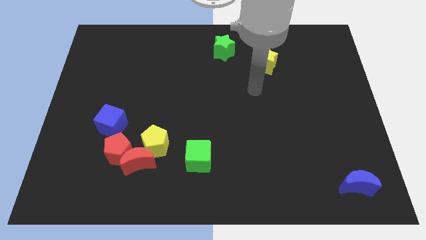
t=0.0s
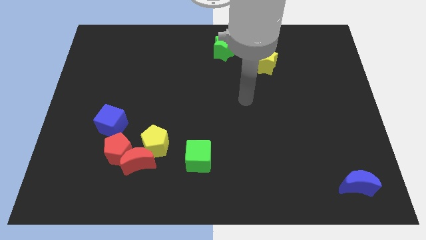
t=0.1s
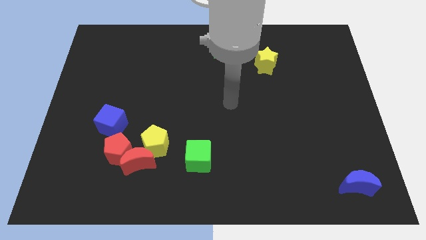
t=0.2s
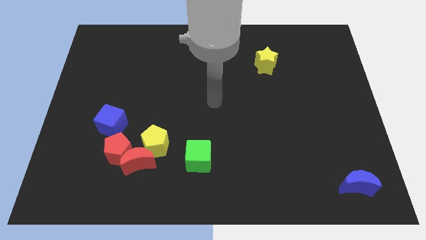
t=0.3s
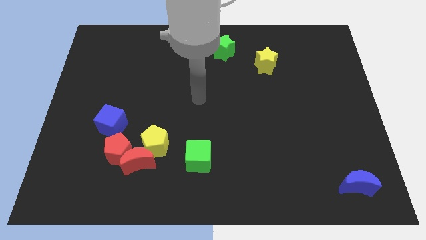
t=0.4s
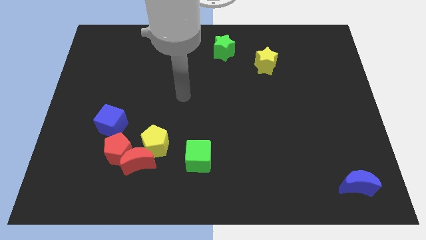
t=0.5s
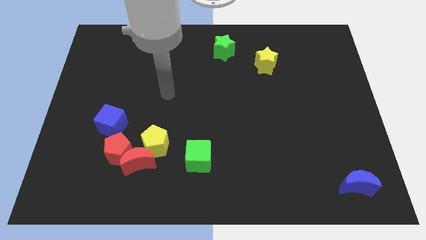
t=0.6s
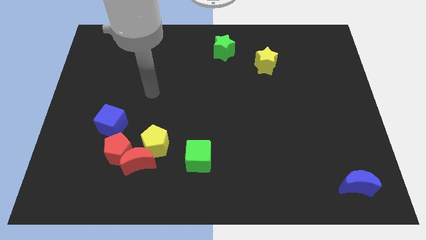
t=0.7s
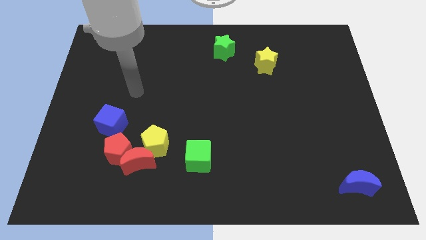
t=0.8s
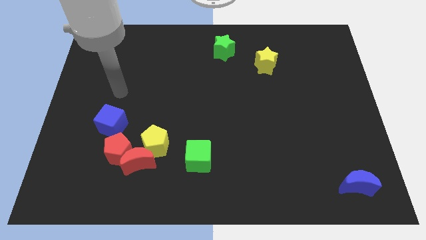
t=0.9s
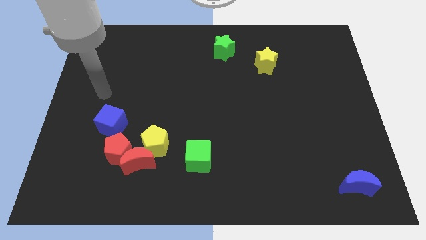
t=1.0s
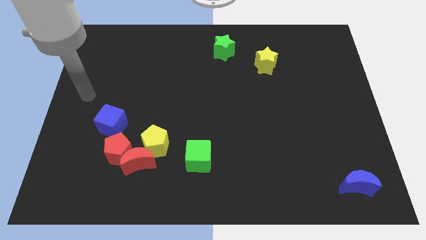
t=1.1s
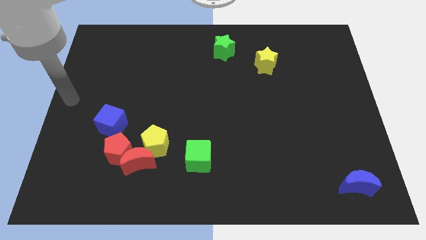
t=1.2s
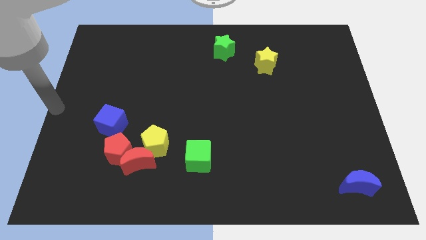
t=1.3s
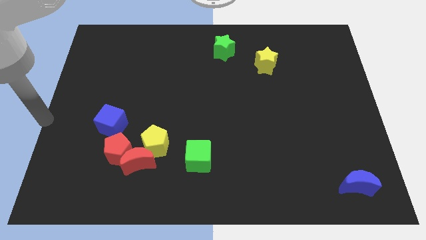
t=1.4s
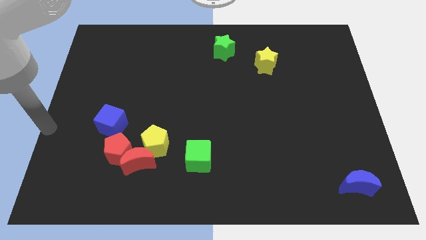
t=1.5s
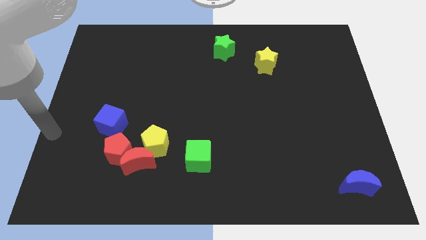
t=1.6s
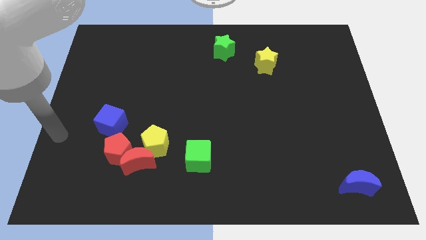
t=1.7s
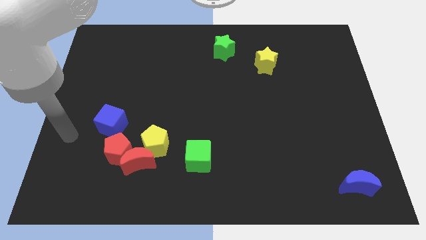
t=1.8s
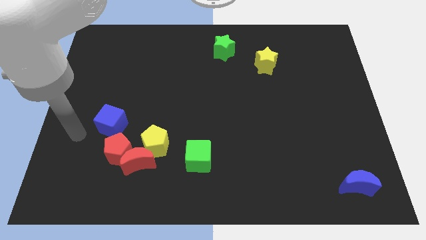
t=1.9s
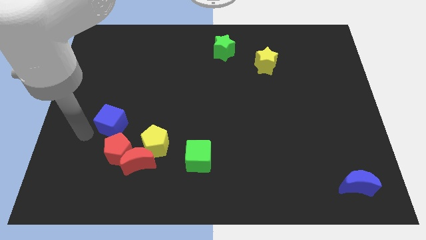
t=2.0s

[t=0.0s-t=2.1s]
move your arm to the left side of the blue cube

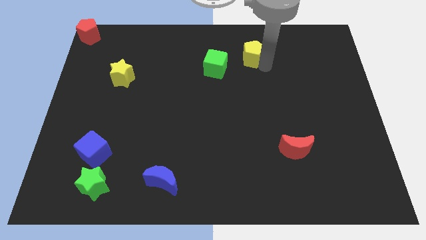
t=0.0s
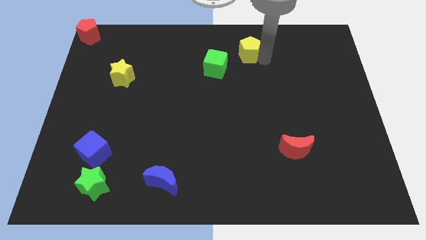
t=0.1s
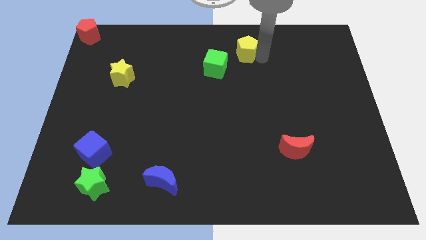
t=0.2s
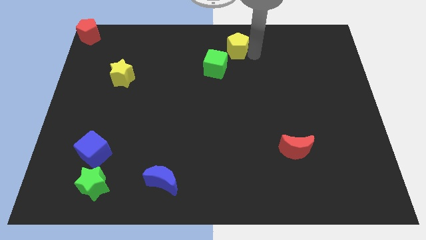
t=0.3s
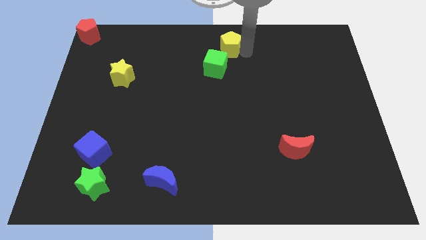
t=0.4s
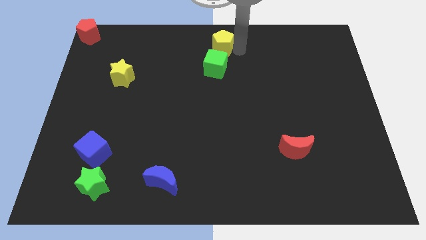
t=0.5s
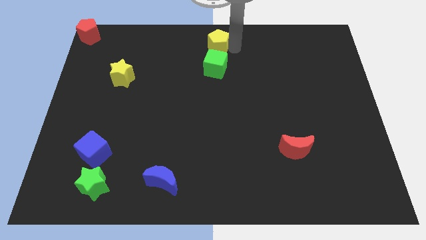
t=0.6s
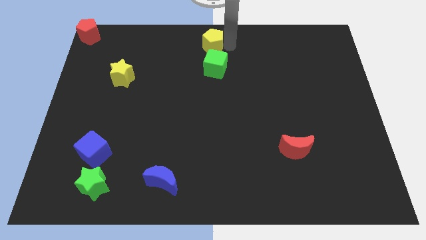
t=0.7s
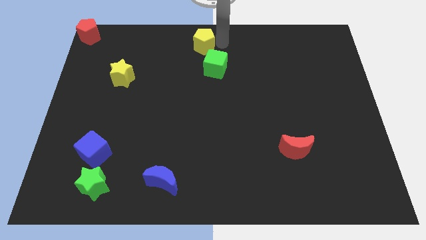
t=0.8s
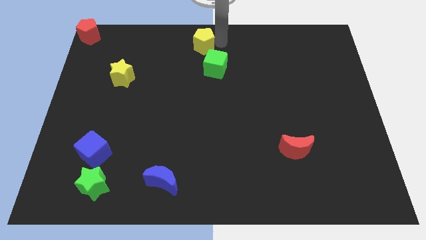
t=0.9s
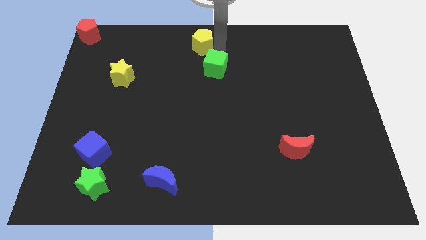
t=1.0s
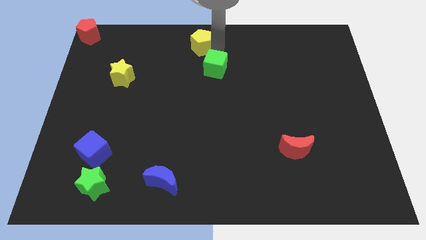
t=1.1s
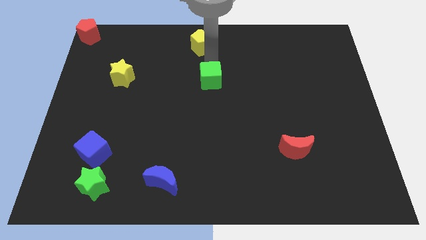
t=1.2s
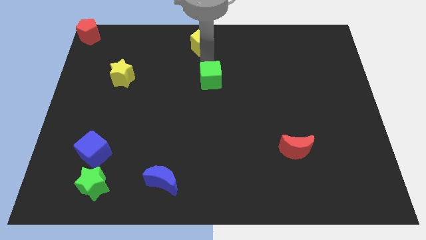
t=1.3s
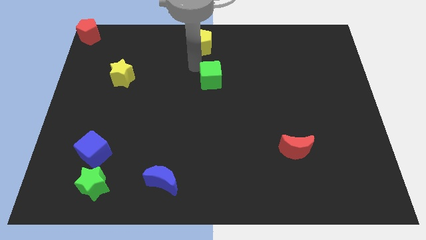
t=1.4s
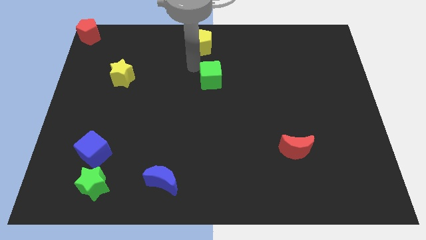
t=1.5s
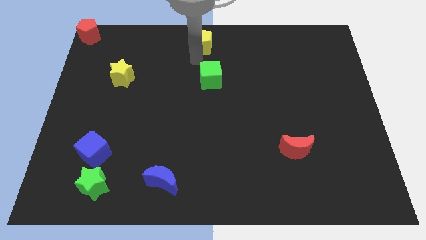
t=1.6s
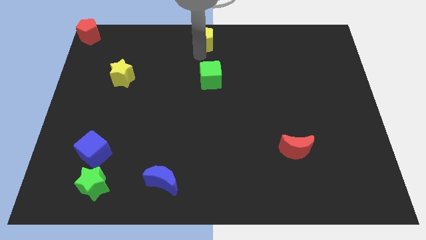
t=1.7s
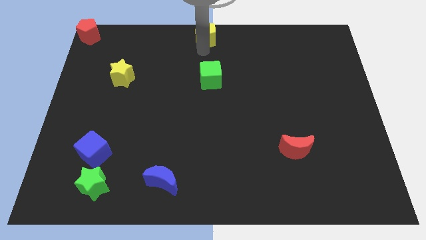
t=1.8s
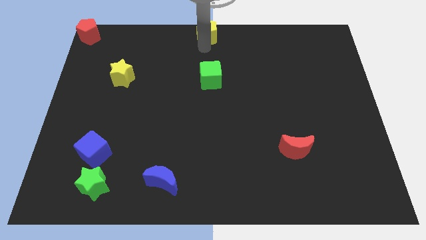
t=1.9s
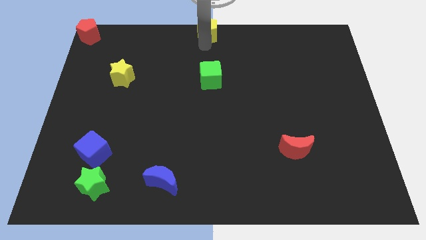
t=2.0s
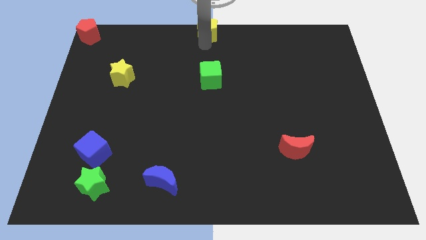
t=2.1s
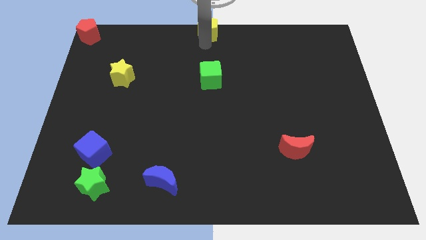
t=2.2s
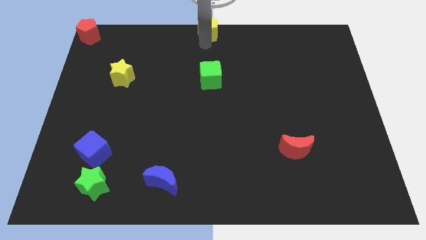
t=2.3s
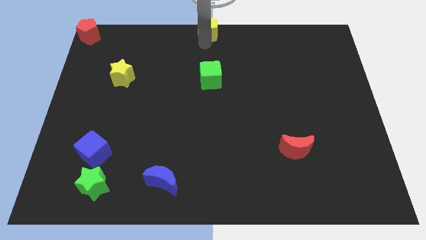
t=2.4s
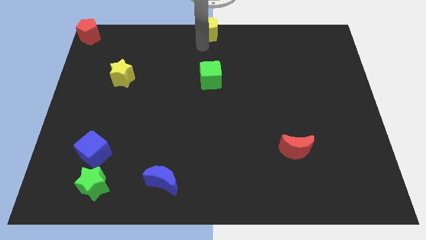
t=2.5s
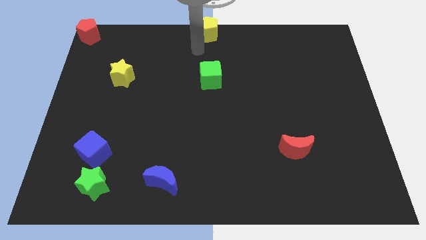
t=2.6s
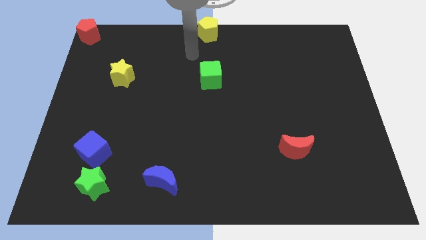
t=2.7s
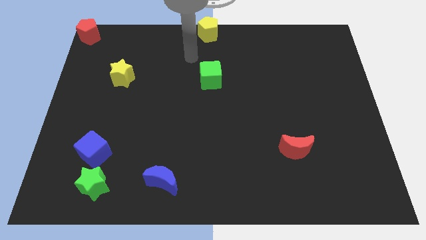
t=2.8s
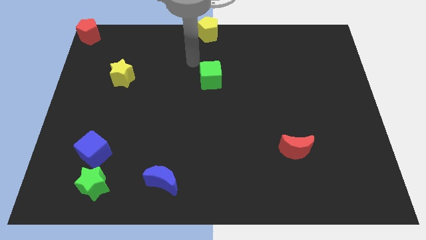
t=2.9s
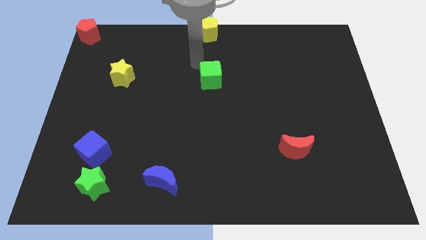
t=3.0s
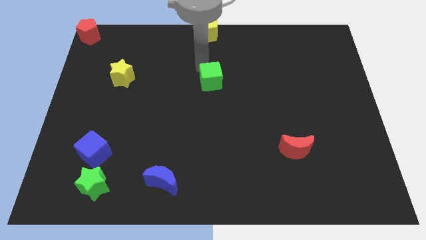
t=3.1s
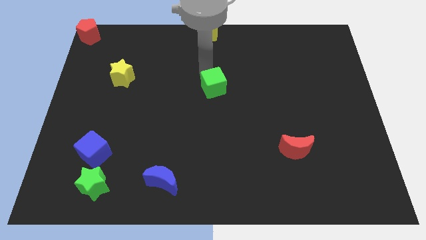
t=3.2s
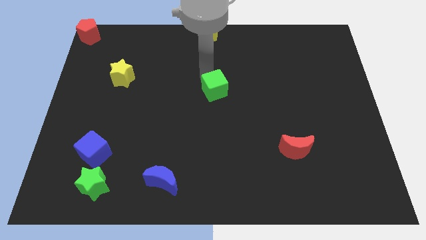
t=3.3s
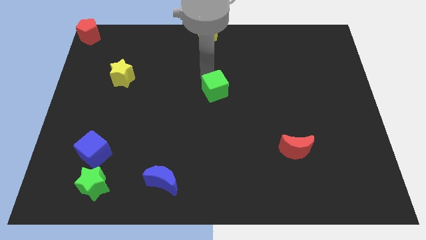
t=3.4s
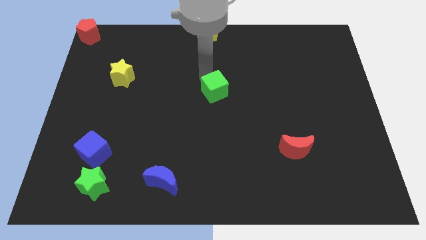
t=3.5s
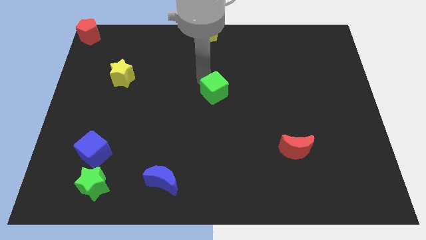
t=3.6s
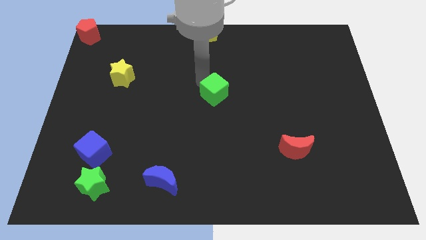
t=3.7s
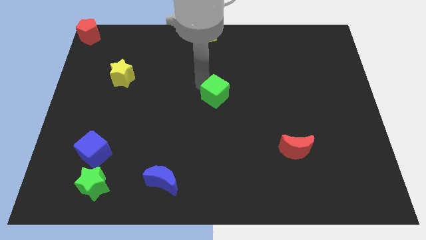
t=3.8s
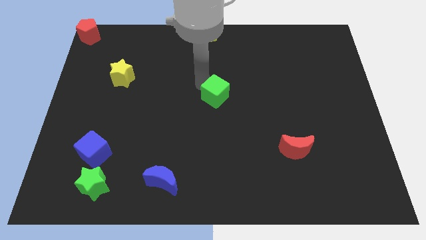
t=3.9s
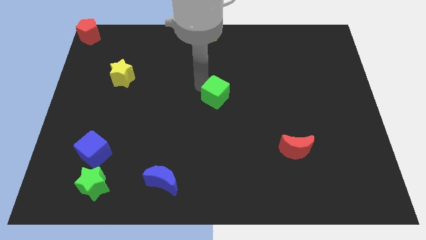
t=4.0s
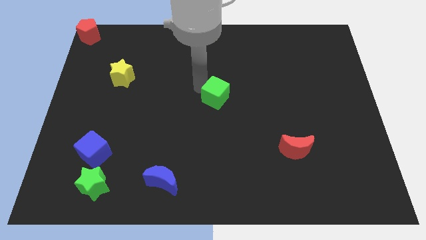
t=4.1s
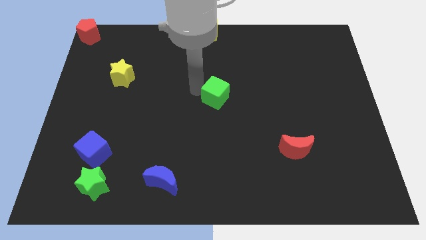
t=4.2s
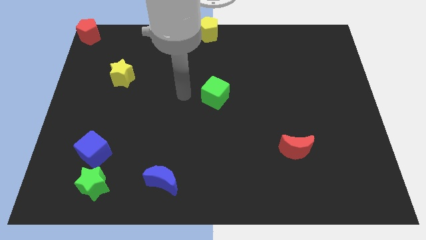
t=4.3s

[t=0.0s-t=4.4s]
slide the yellow pentagon and green cube vertical to each other

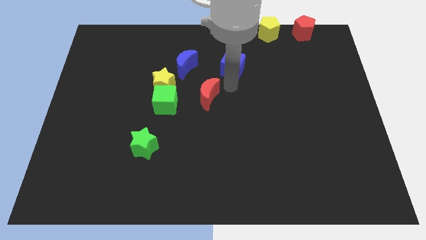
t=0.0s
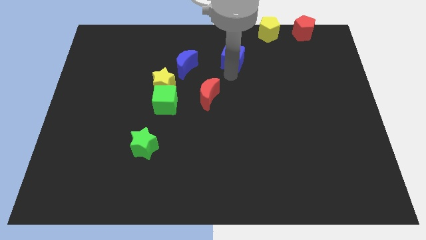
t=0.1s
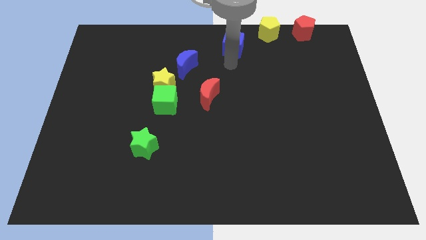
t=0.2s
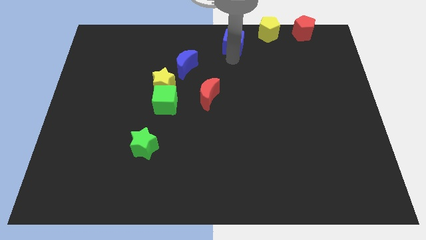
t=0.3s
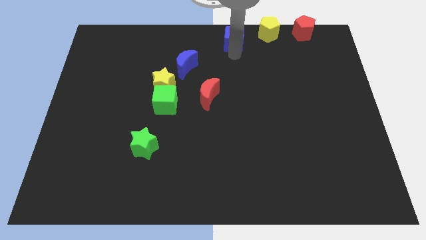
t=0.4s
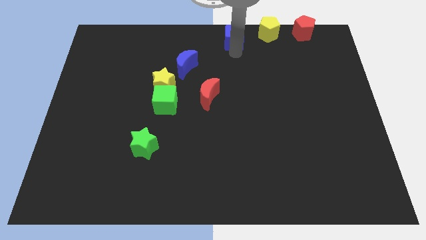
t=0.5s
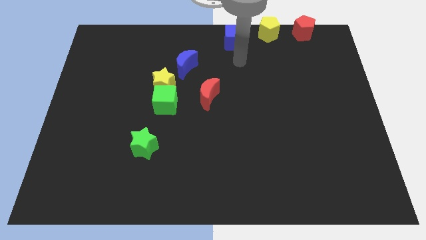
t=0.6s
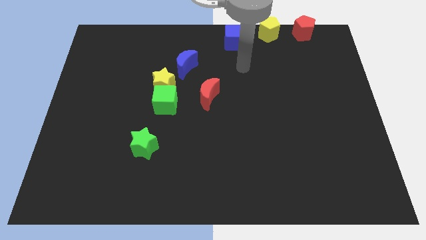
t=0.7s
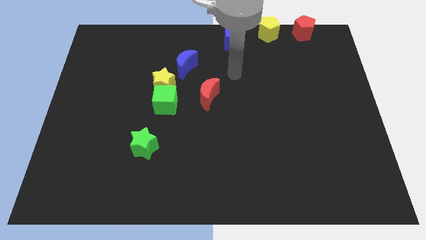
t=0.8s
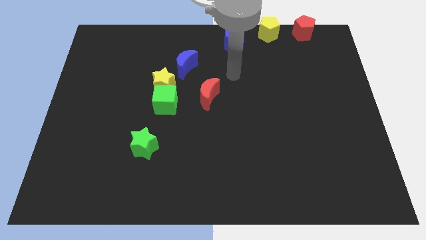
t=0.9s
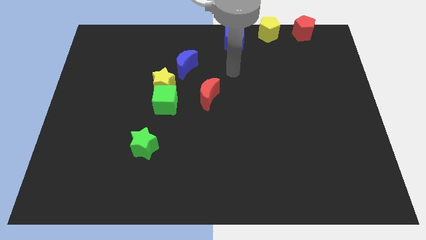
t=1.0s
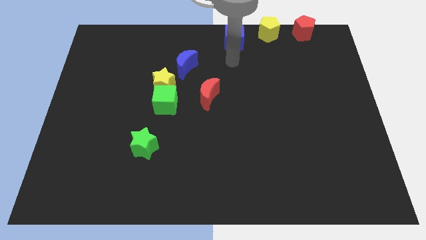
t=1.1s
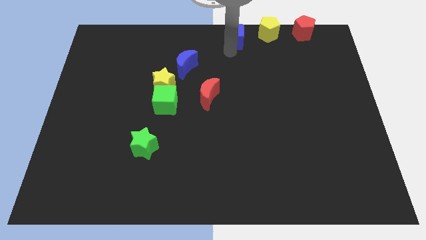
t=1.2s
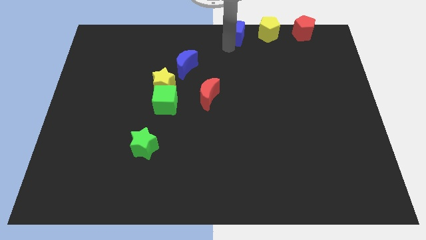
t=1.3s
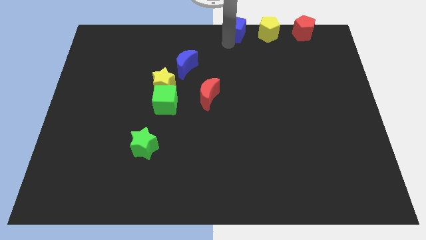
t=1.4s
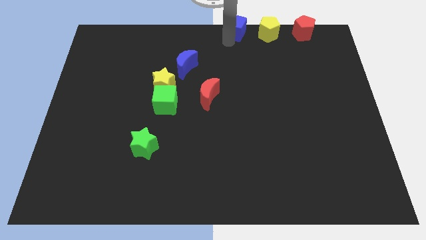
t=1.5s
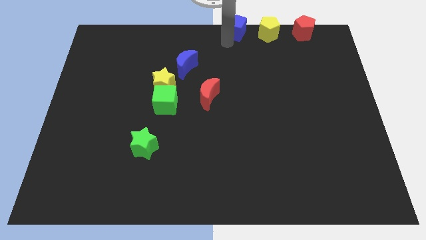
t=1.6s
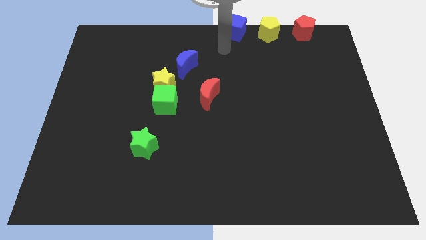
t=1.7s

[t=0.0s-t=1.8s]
put the blue cube to the top center of the board

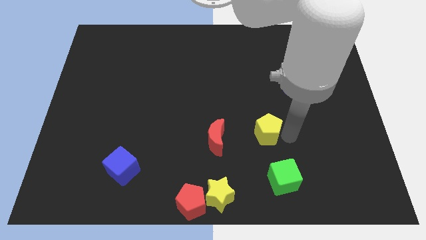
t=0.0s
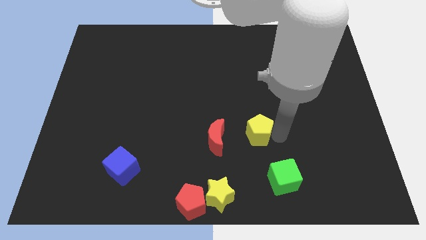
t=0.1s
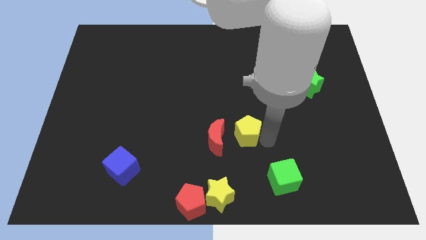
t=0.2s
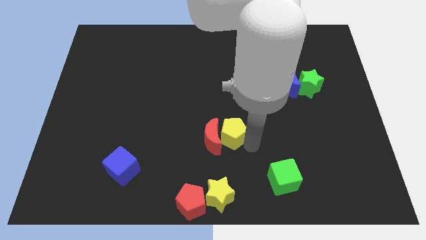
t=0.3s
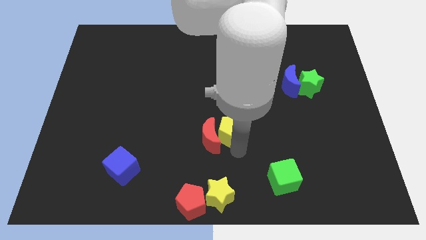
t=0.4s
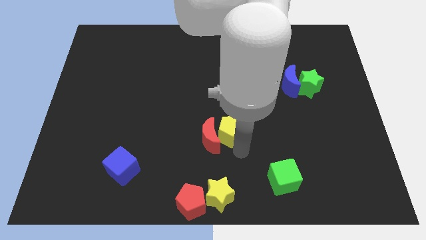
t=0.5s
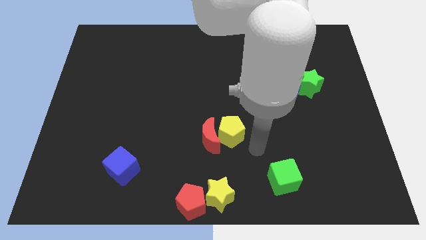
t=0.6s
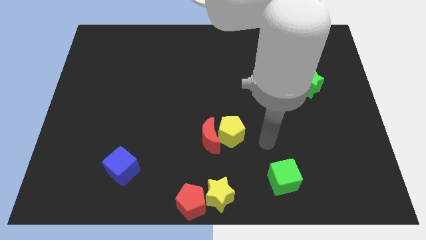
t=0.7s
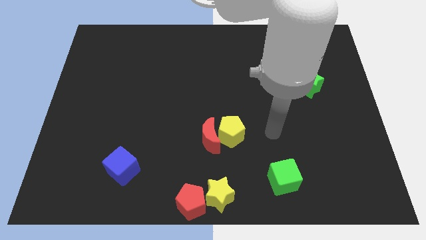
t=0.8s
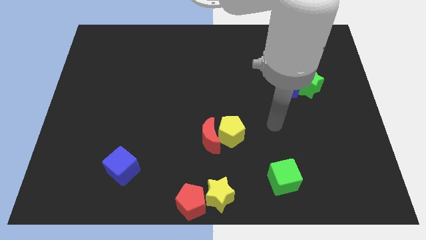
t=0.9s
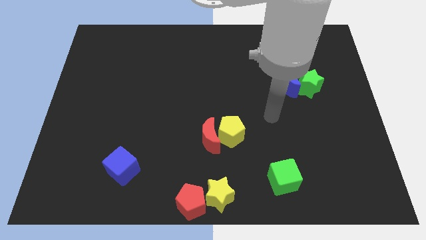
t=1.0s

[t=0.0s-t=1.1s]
push the yellow pentagon into the red moon
